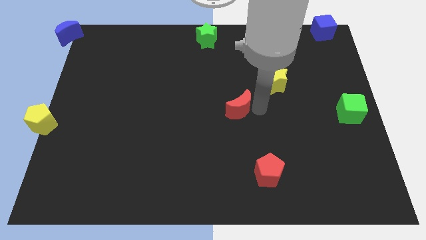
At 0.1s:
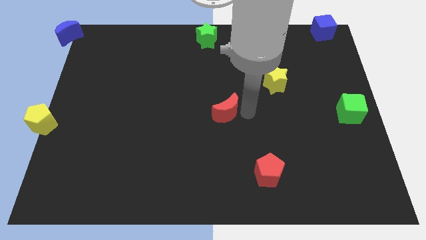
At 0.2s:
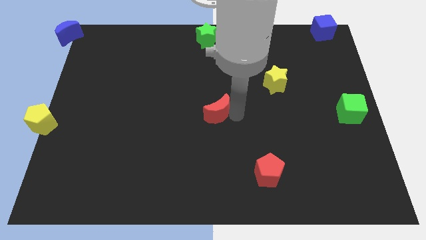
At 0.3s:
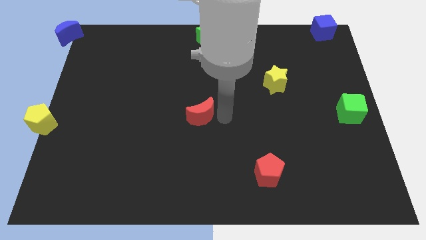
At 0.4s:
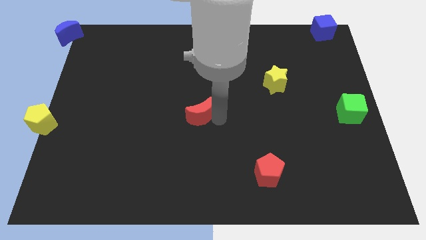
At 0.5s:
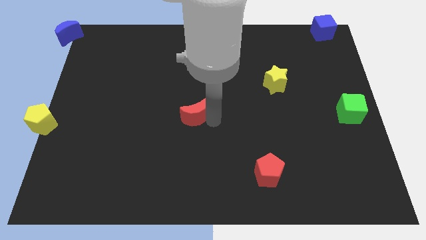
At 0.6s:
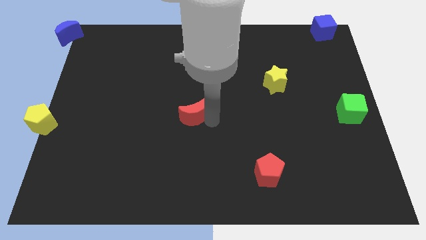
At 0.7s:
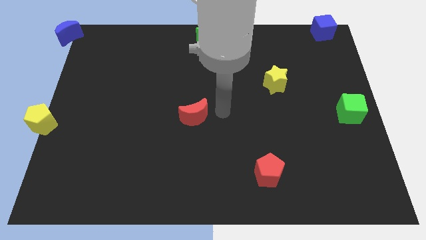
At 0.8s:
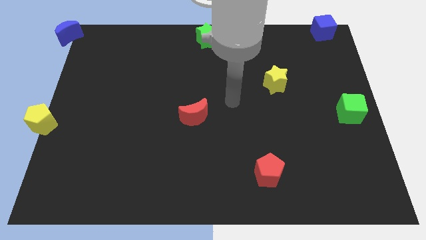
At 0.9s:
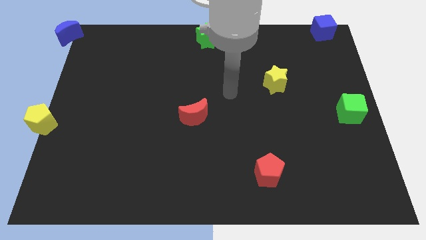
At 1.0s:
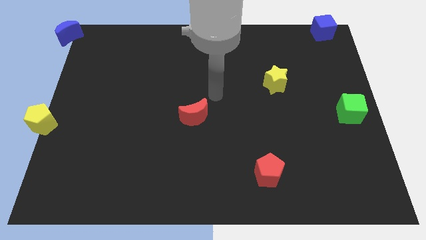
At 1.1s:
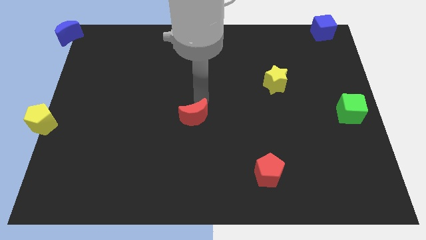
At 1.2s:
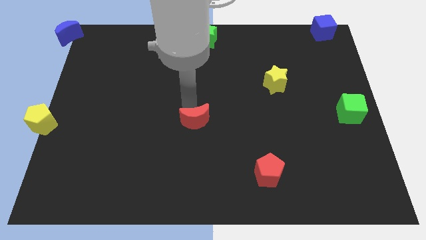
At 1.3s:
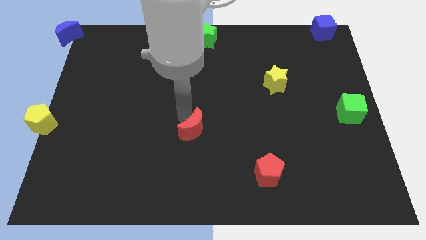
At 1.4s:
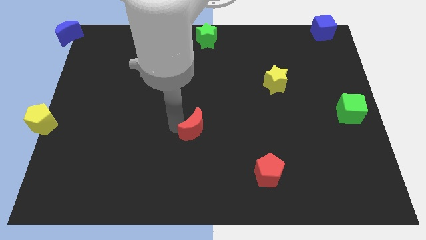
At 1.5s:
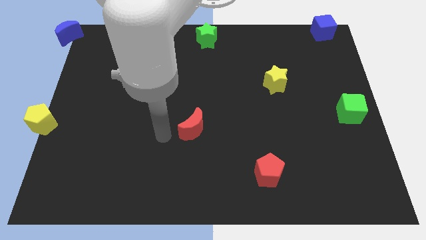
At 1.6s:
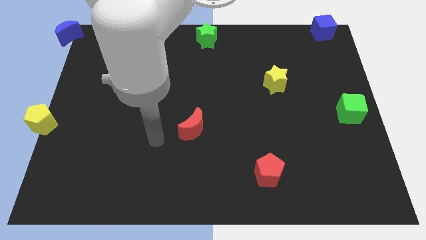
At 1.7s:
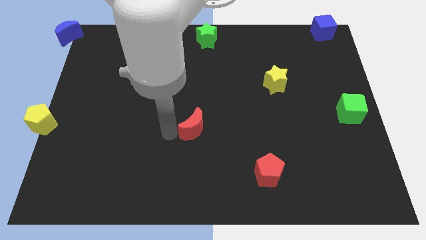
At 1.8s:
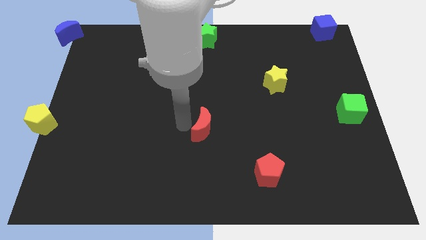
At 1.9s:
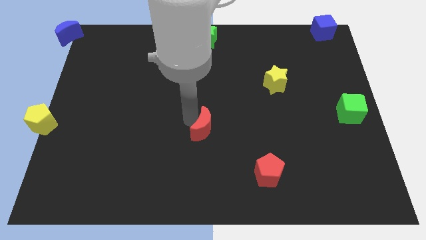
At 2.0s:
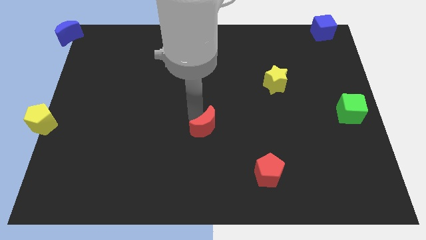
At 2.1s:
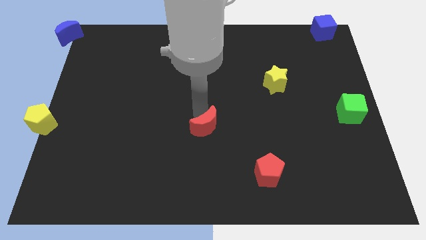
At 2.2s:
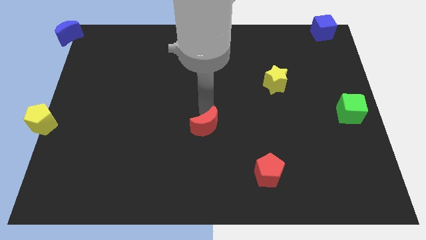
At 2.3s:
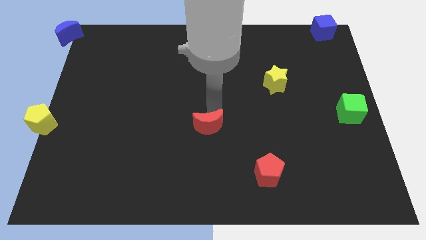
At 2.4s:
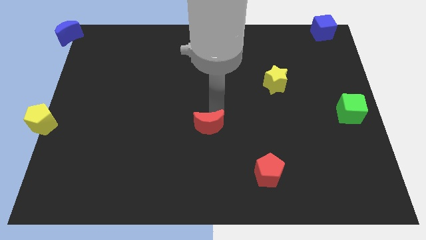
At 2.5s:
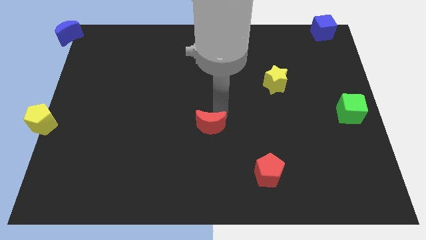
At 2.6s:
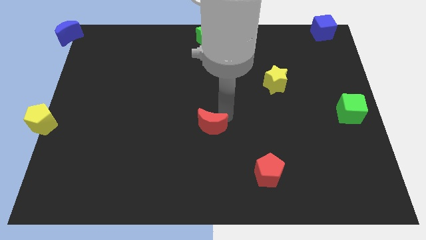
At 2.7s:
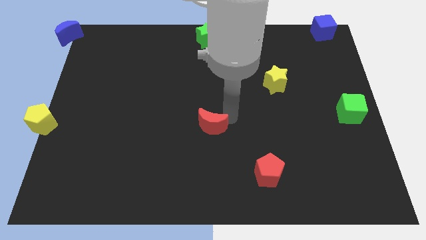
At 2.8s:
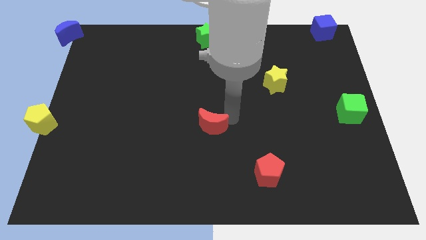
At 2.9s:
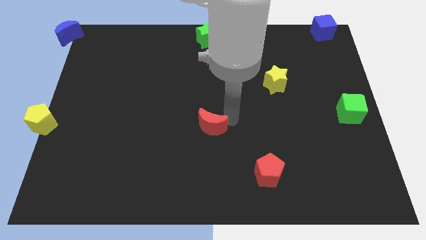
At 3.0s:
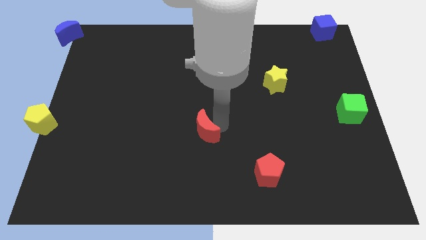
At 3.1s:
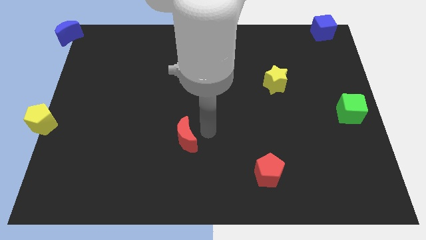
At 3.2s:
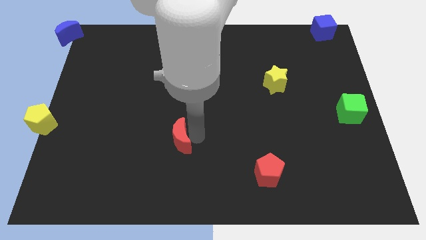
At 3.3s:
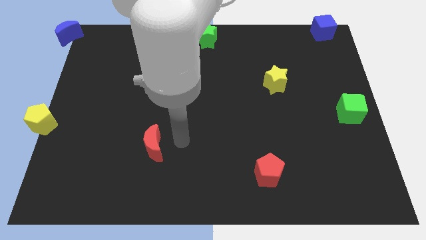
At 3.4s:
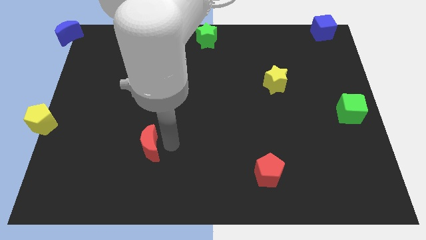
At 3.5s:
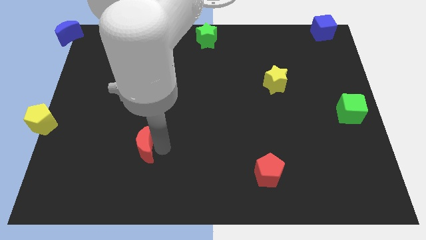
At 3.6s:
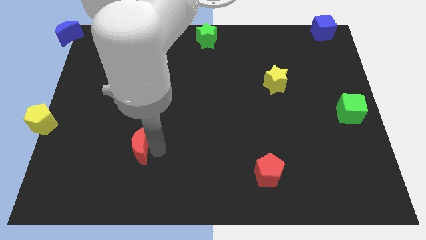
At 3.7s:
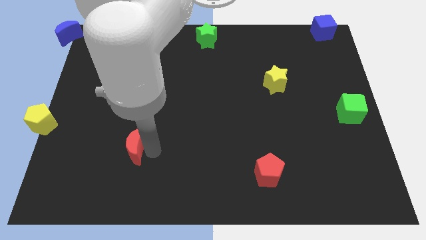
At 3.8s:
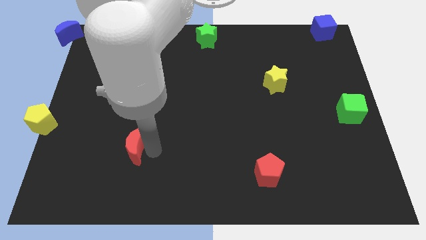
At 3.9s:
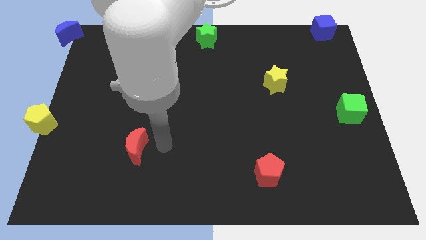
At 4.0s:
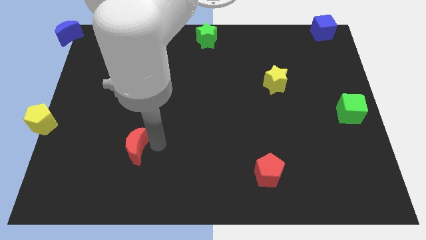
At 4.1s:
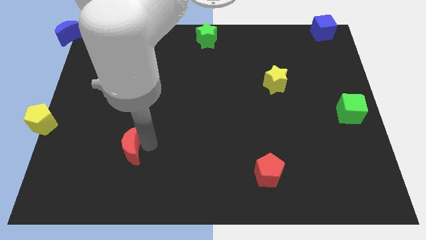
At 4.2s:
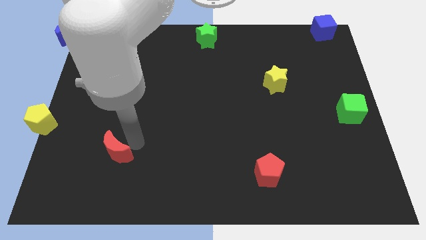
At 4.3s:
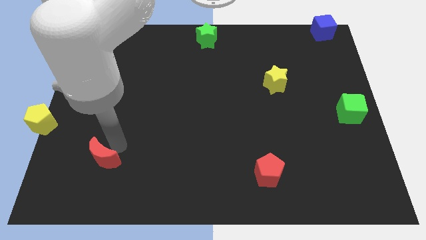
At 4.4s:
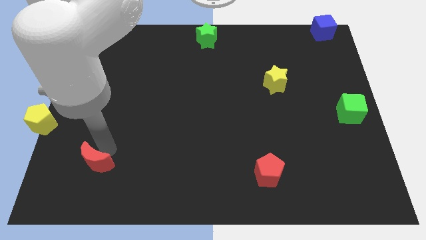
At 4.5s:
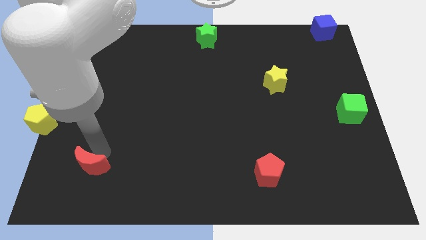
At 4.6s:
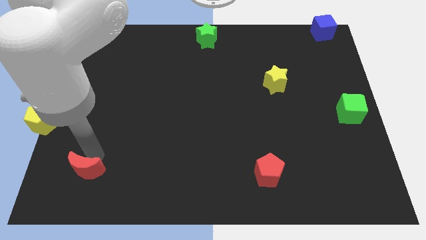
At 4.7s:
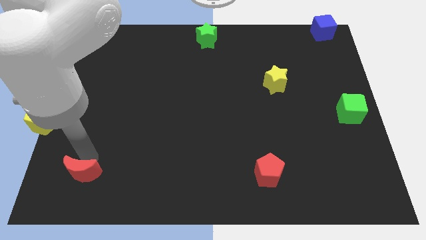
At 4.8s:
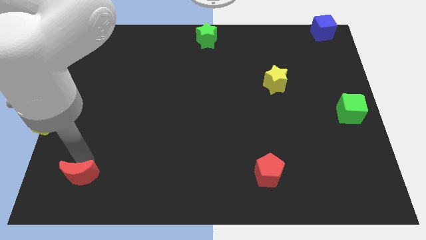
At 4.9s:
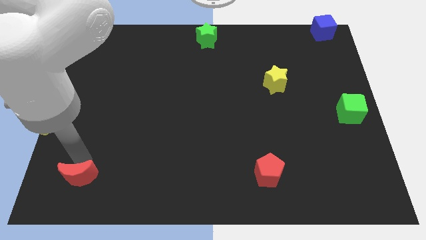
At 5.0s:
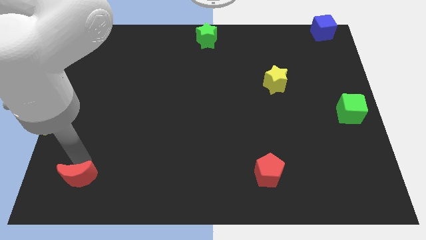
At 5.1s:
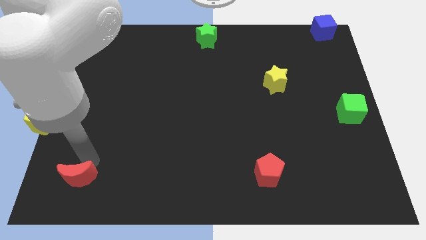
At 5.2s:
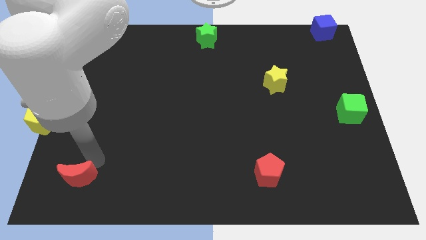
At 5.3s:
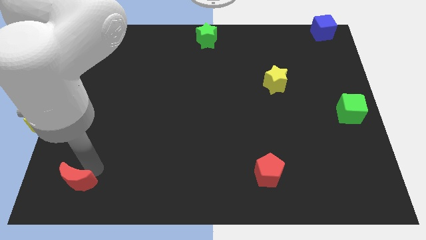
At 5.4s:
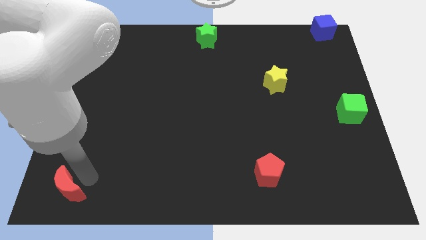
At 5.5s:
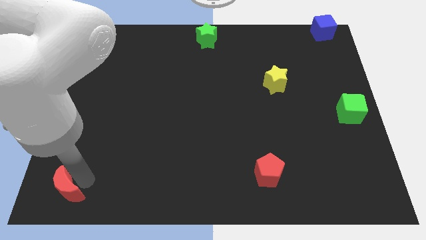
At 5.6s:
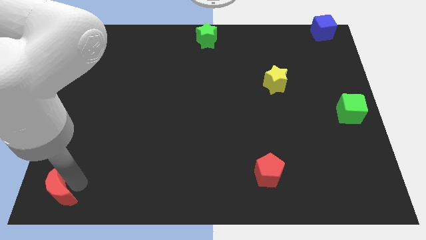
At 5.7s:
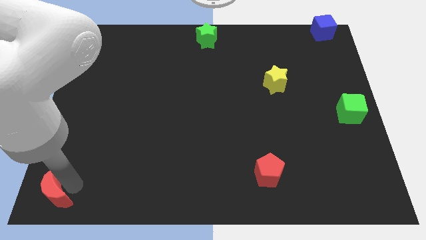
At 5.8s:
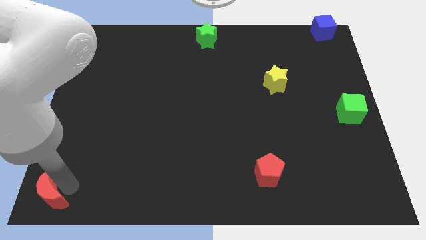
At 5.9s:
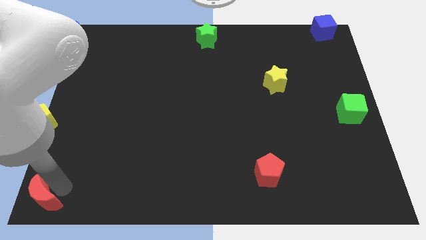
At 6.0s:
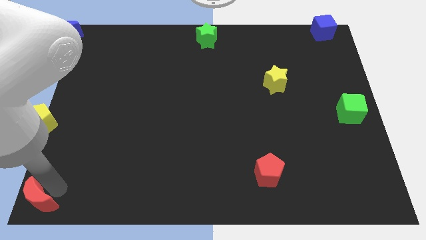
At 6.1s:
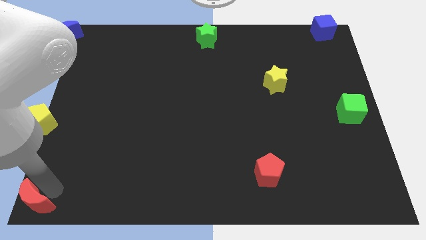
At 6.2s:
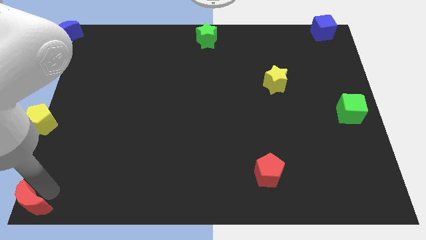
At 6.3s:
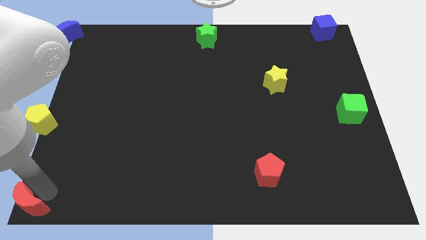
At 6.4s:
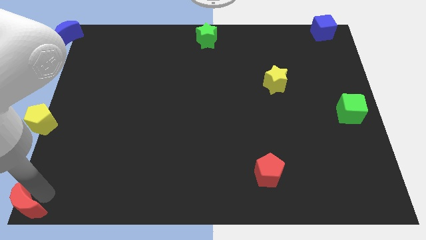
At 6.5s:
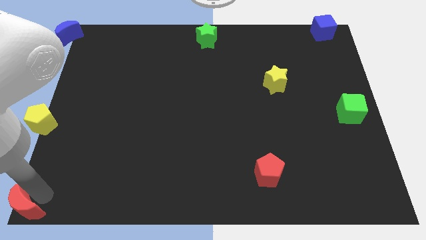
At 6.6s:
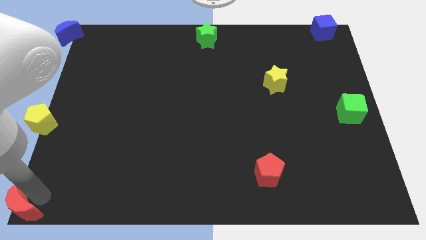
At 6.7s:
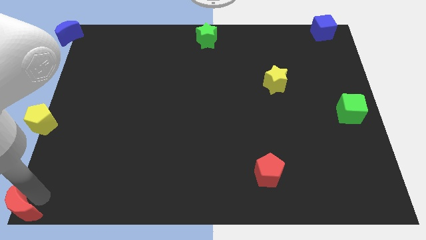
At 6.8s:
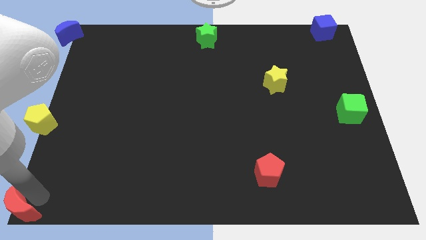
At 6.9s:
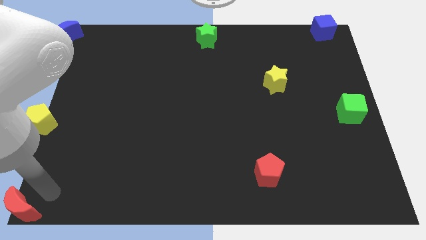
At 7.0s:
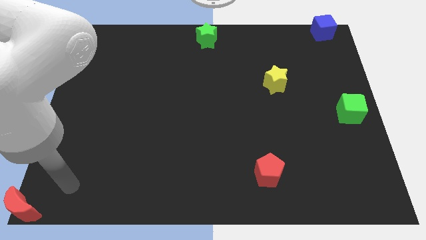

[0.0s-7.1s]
push the red crescent to the bottom left corner of the board

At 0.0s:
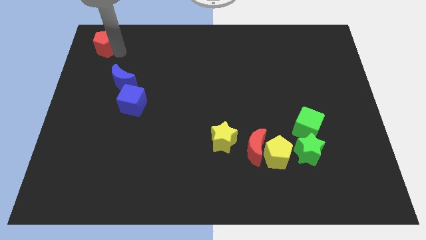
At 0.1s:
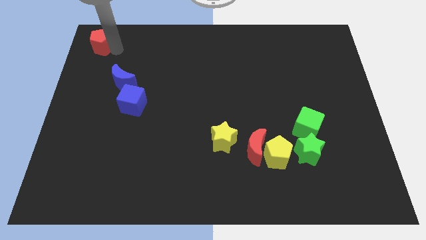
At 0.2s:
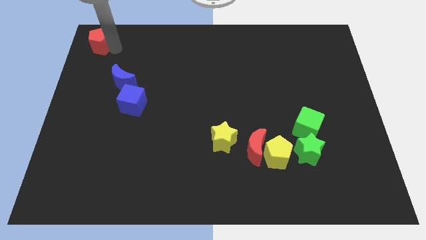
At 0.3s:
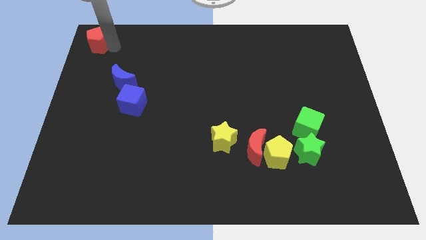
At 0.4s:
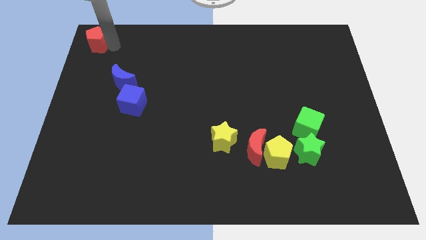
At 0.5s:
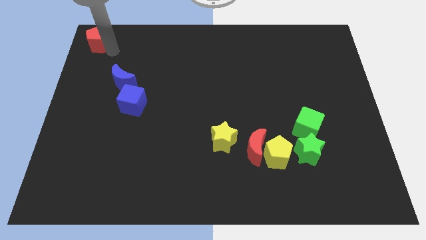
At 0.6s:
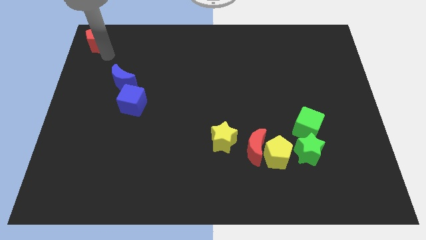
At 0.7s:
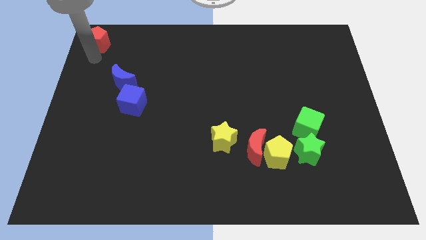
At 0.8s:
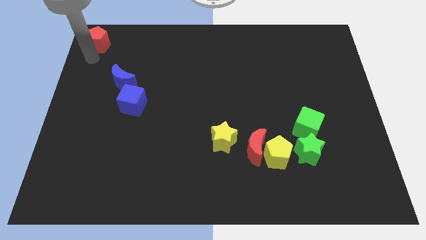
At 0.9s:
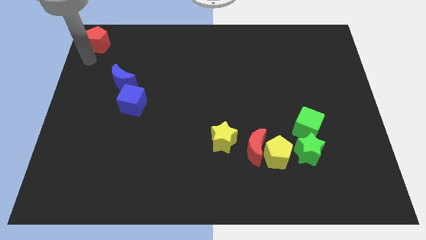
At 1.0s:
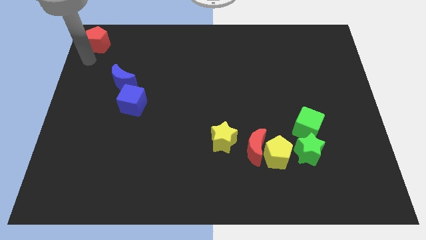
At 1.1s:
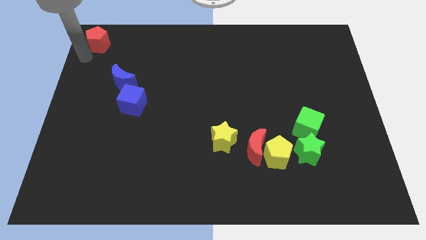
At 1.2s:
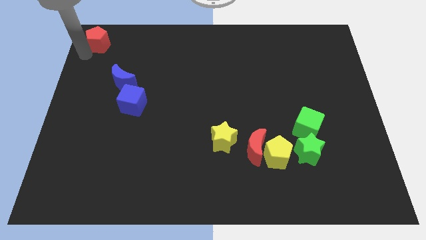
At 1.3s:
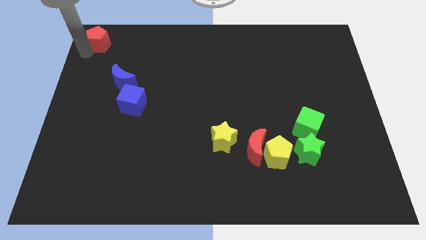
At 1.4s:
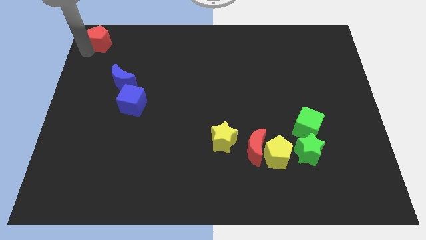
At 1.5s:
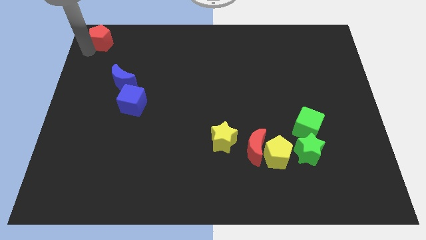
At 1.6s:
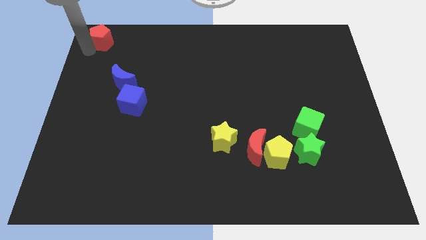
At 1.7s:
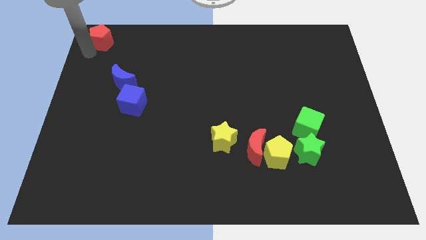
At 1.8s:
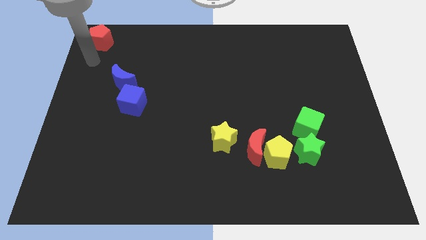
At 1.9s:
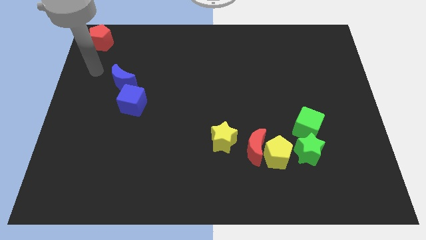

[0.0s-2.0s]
push the red pentagon to the top left corner of the board
